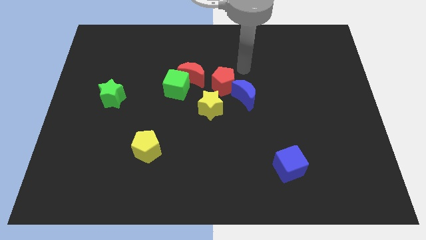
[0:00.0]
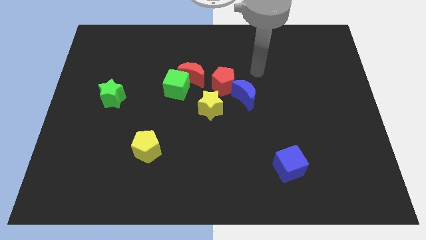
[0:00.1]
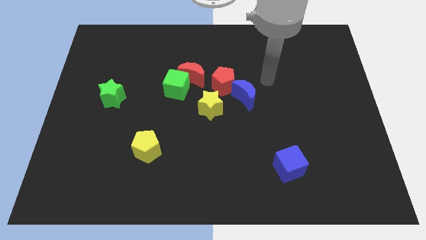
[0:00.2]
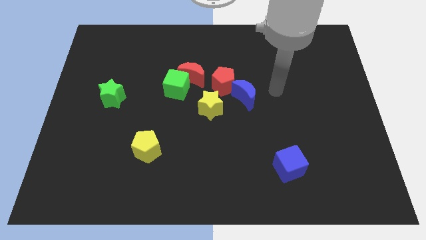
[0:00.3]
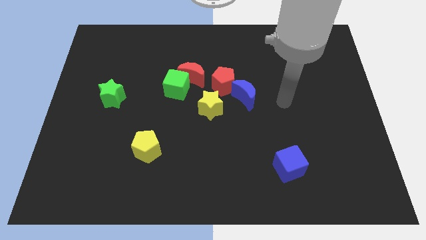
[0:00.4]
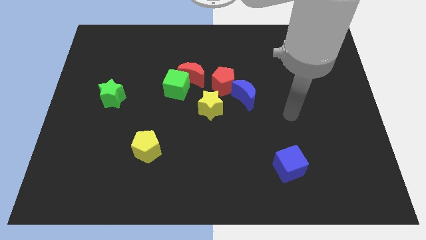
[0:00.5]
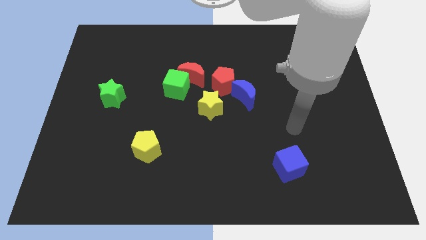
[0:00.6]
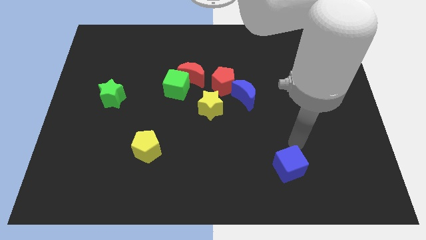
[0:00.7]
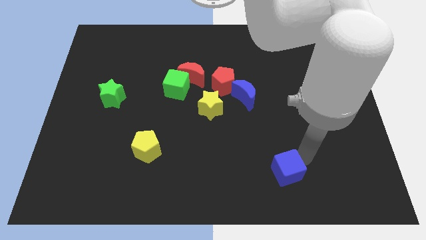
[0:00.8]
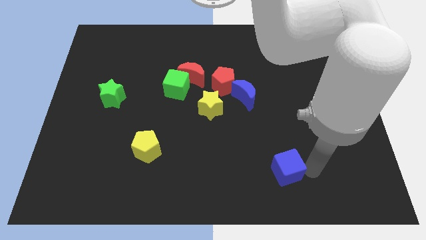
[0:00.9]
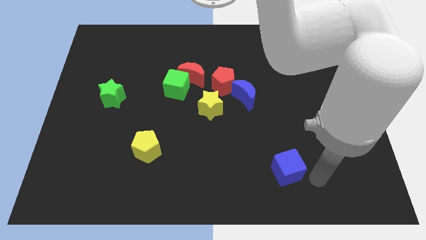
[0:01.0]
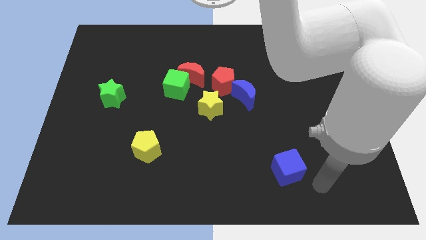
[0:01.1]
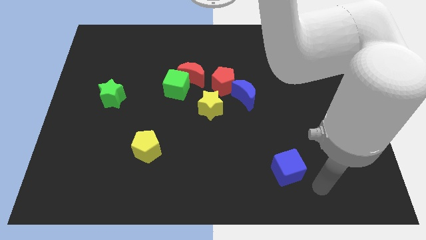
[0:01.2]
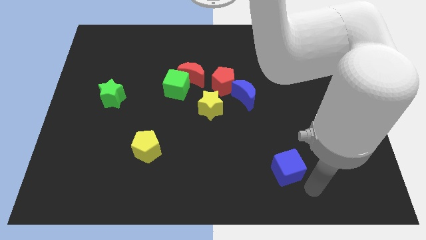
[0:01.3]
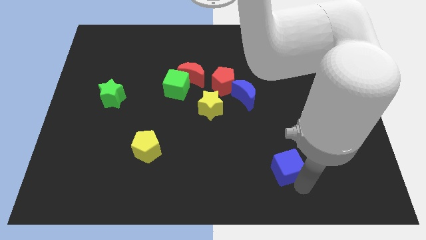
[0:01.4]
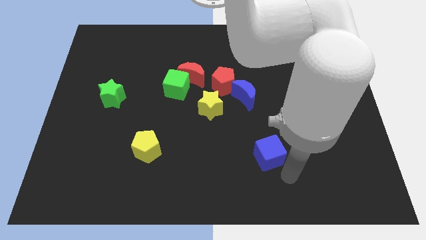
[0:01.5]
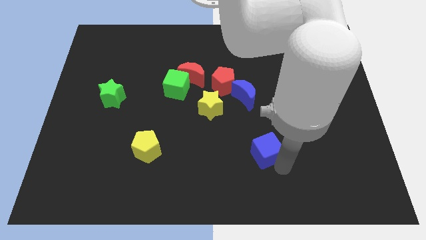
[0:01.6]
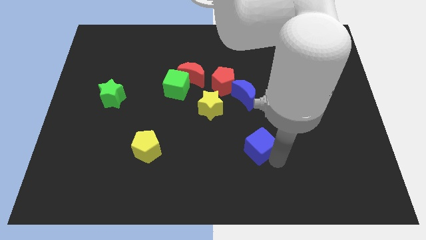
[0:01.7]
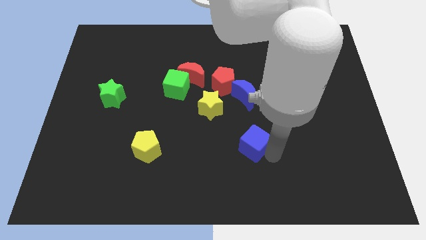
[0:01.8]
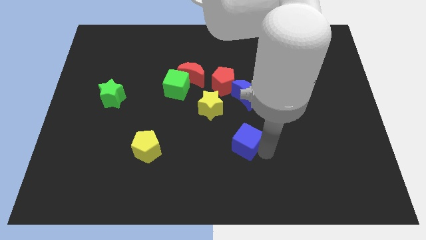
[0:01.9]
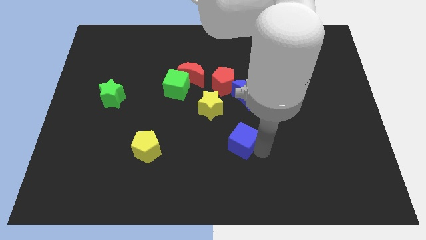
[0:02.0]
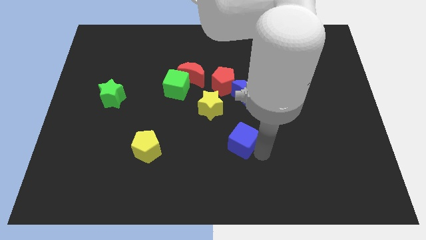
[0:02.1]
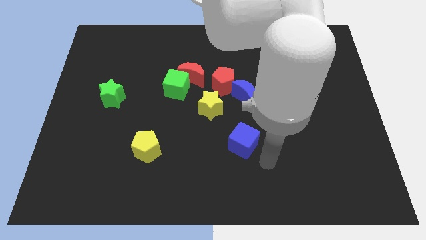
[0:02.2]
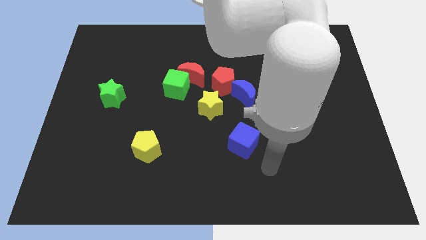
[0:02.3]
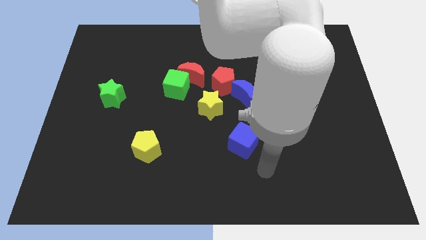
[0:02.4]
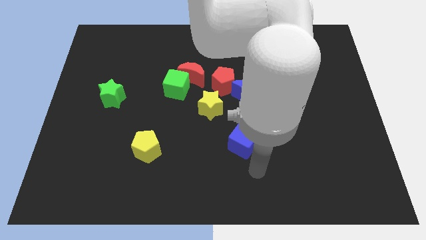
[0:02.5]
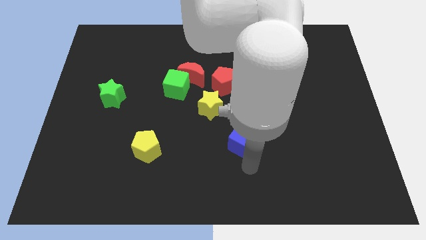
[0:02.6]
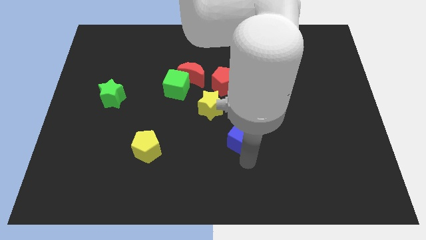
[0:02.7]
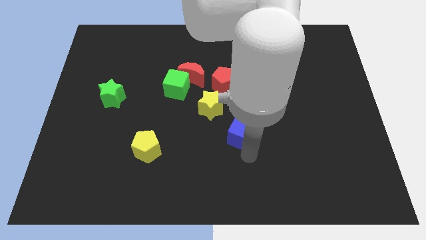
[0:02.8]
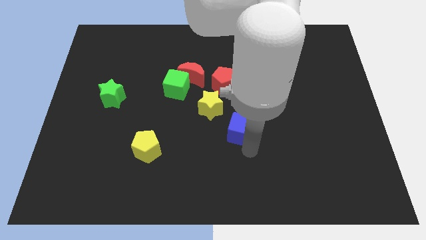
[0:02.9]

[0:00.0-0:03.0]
push the blue cube towards the yellow star

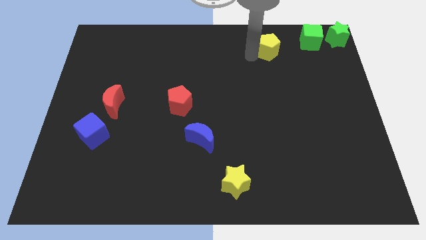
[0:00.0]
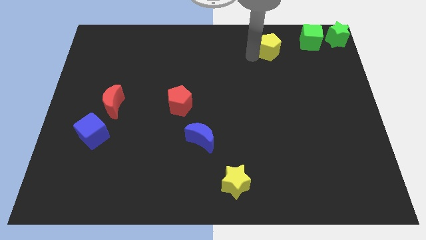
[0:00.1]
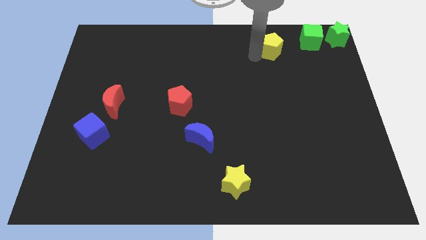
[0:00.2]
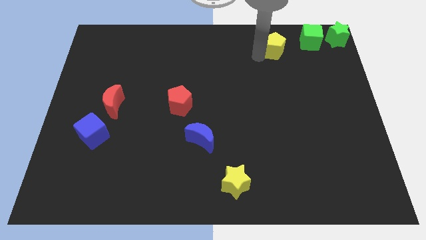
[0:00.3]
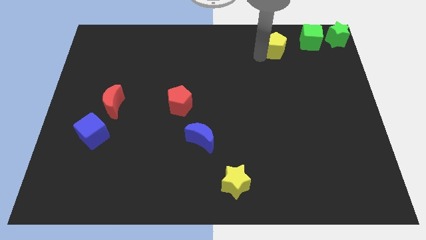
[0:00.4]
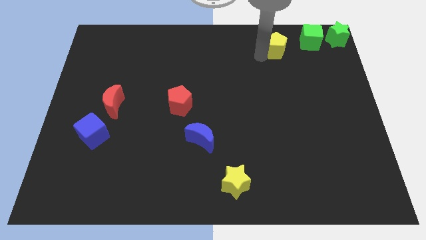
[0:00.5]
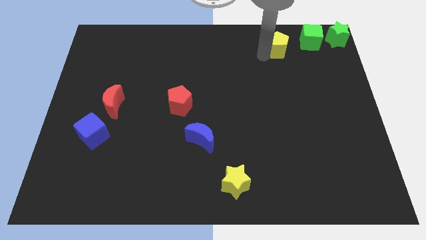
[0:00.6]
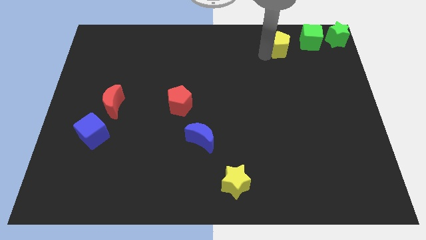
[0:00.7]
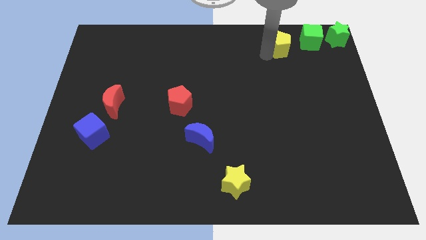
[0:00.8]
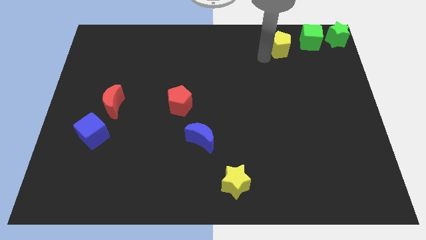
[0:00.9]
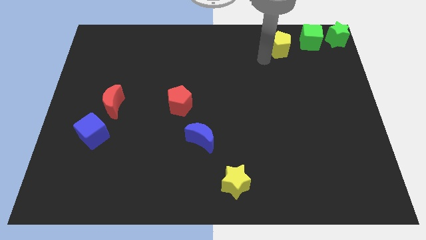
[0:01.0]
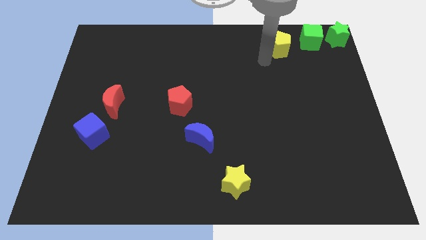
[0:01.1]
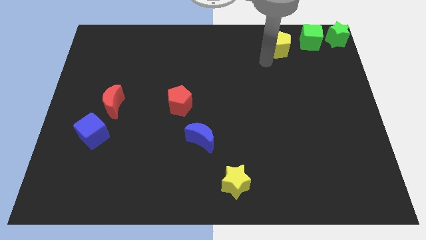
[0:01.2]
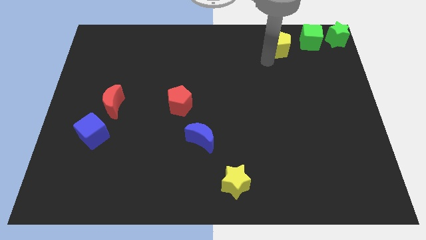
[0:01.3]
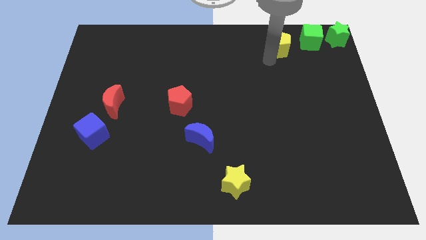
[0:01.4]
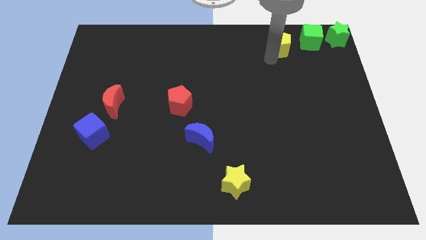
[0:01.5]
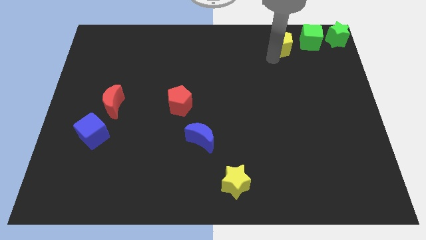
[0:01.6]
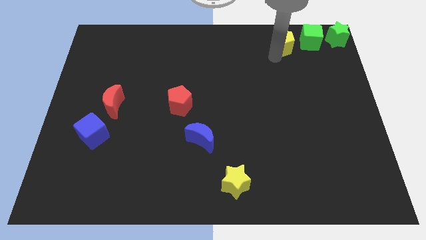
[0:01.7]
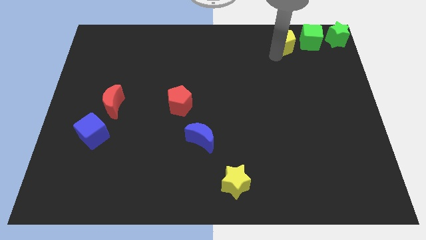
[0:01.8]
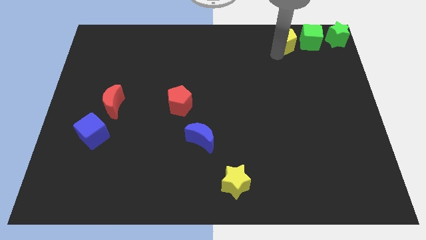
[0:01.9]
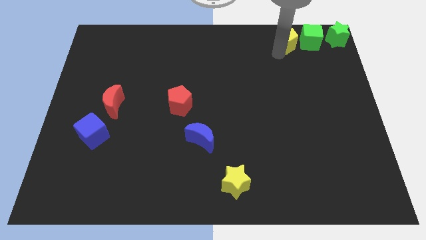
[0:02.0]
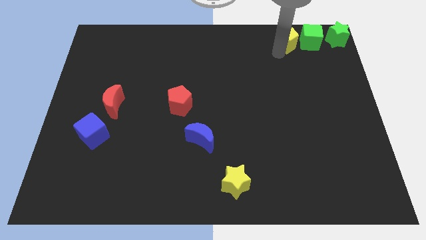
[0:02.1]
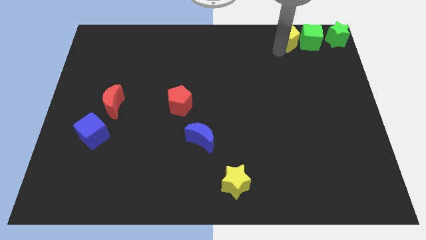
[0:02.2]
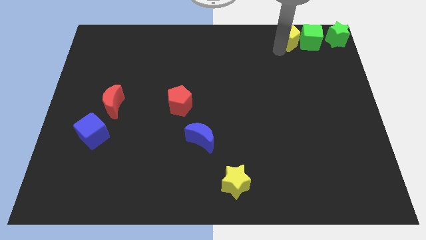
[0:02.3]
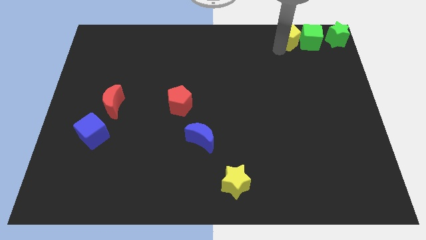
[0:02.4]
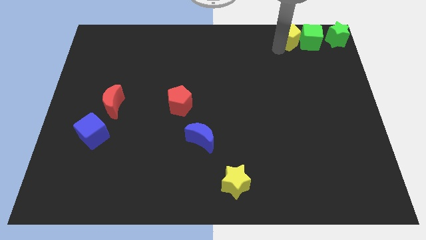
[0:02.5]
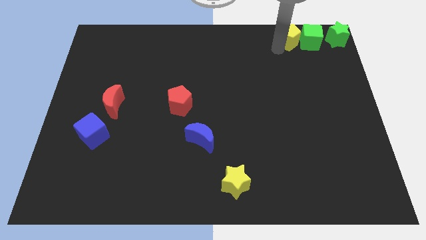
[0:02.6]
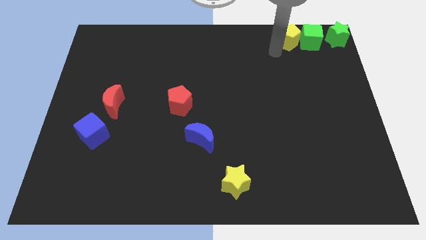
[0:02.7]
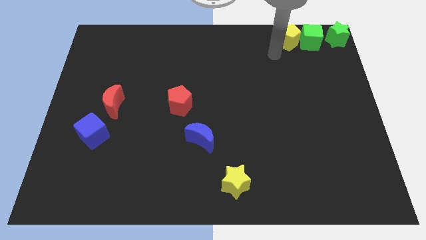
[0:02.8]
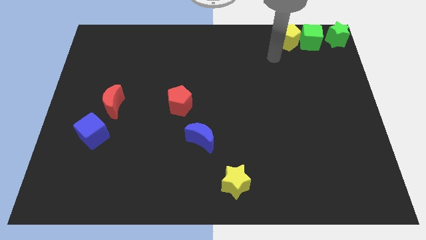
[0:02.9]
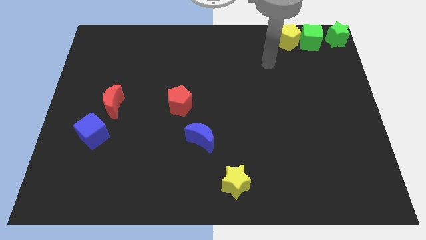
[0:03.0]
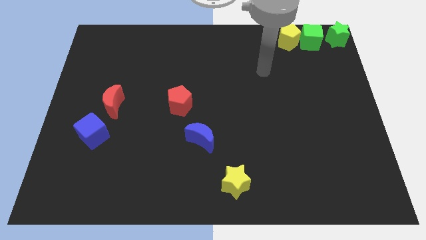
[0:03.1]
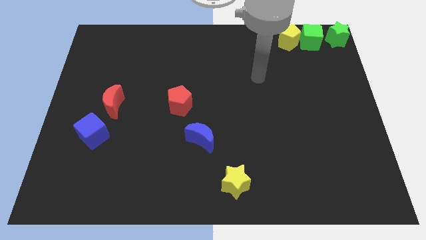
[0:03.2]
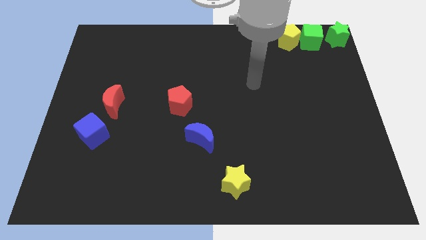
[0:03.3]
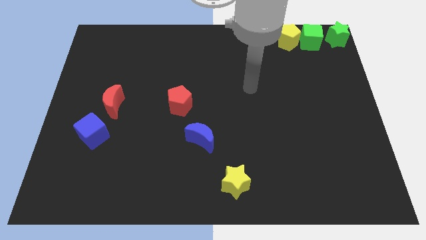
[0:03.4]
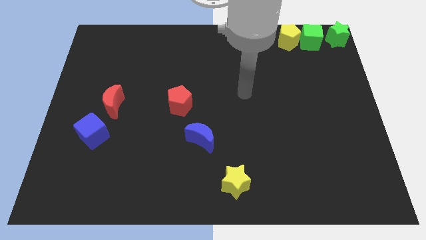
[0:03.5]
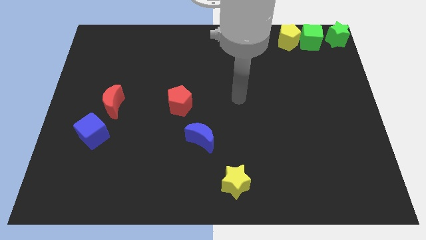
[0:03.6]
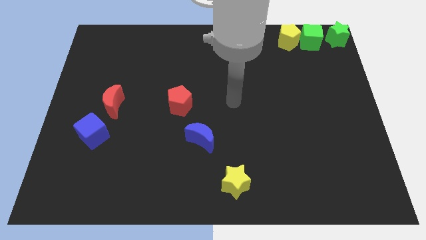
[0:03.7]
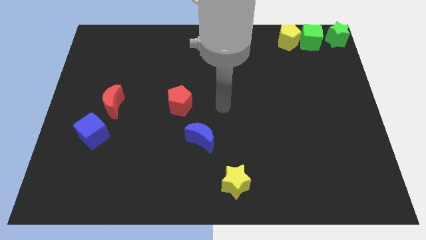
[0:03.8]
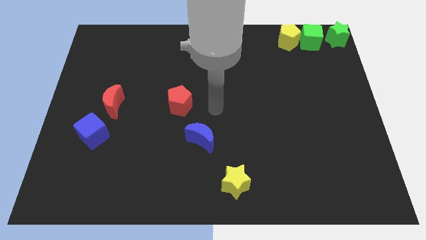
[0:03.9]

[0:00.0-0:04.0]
place the yellow pentagon parallel left to the green cube

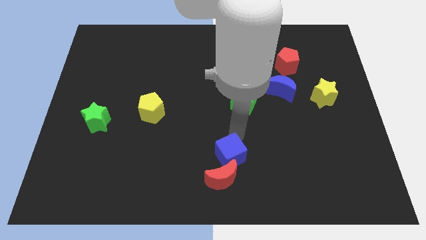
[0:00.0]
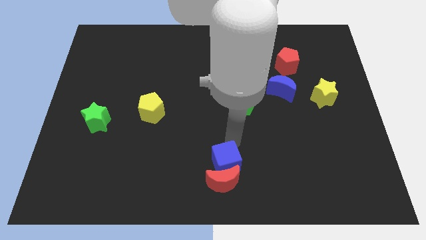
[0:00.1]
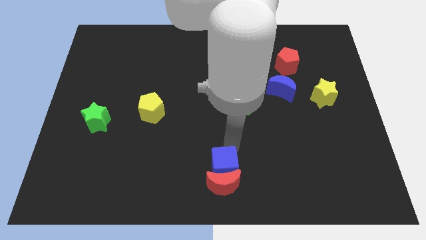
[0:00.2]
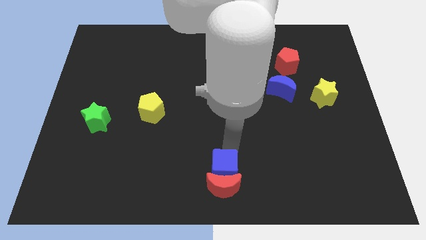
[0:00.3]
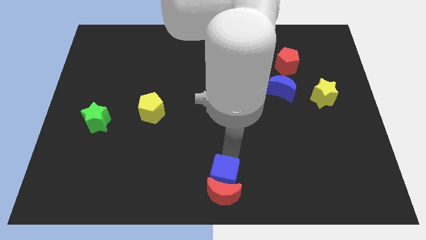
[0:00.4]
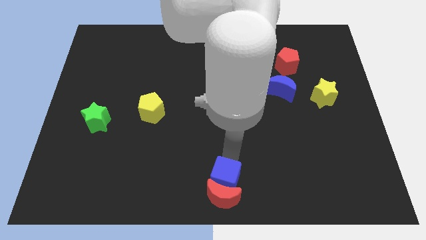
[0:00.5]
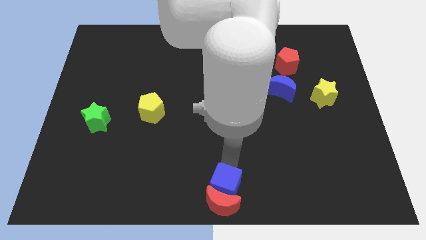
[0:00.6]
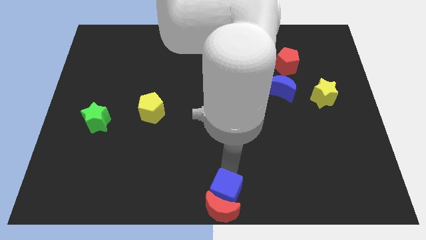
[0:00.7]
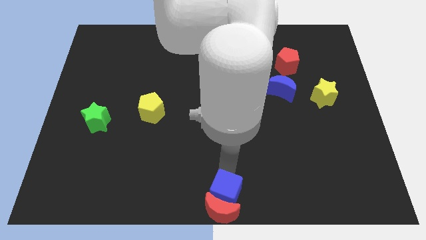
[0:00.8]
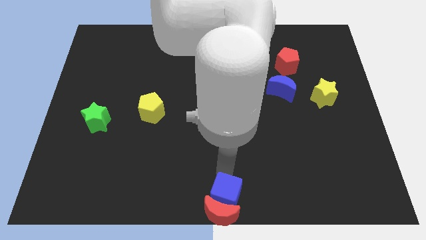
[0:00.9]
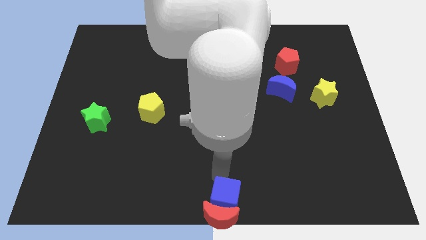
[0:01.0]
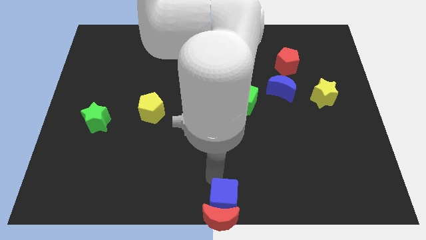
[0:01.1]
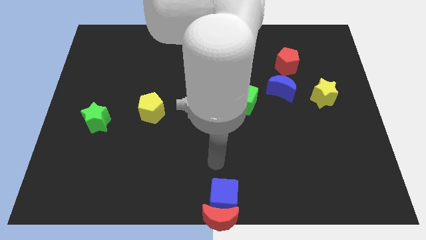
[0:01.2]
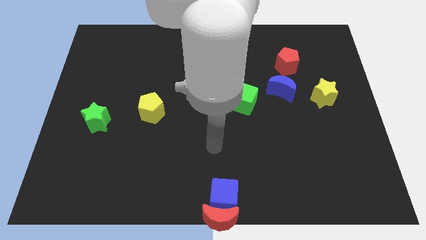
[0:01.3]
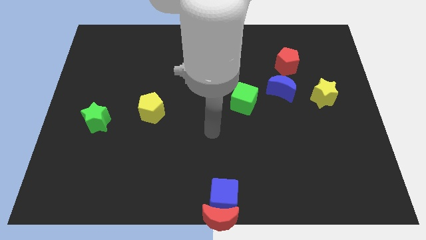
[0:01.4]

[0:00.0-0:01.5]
move the blue cube into the red crescent

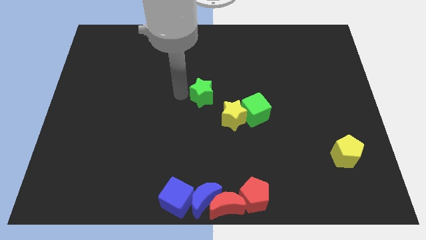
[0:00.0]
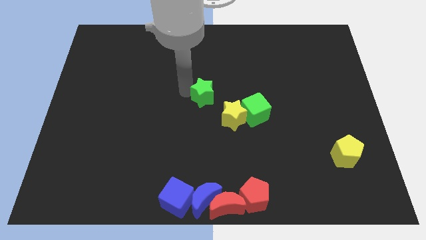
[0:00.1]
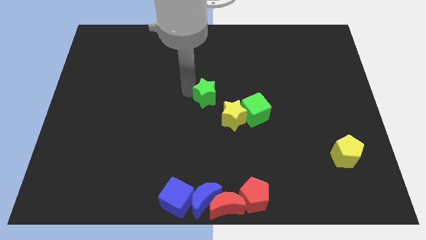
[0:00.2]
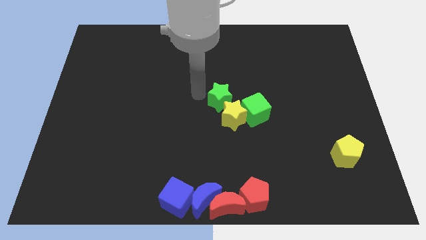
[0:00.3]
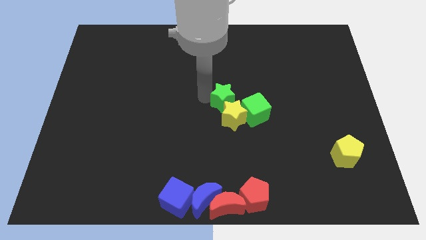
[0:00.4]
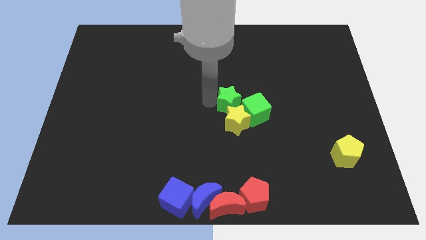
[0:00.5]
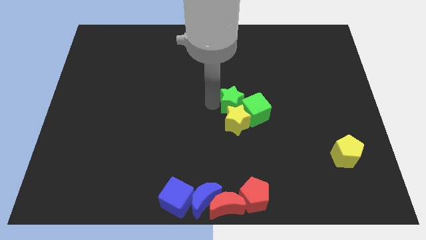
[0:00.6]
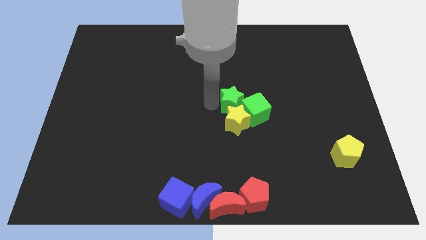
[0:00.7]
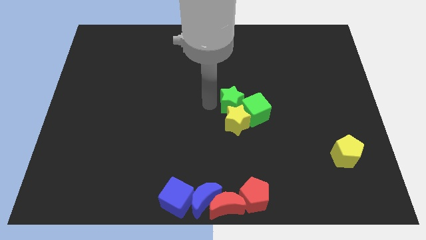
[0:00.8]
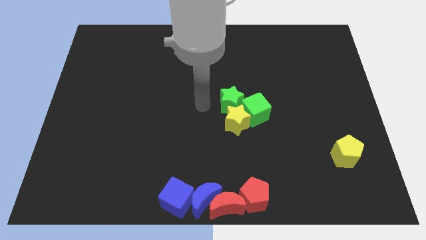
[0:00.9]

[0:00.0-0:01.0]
push the green star towards the diagonal top left corner of the green cube
